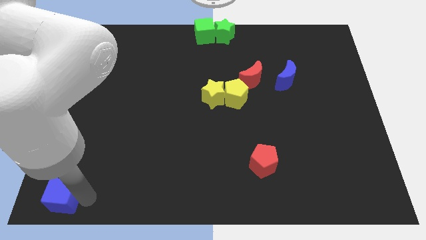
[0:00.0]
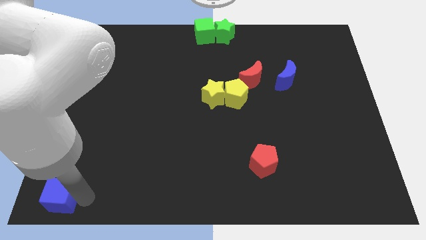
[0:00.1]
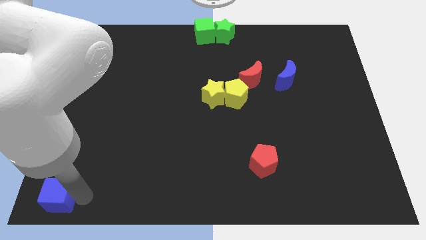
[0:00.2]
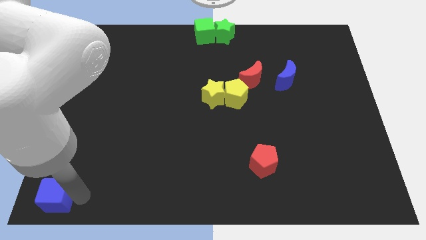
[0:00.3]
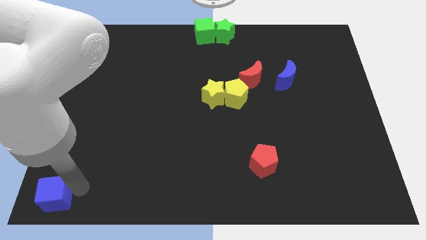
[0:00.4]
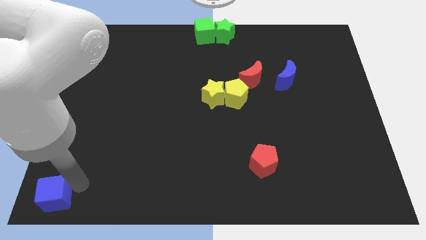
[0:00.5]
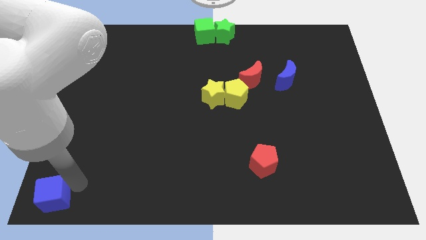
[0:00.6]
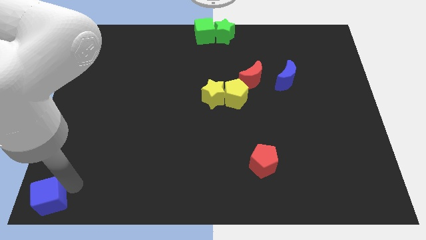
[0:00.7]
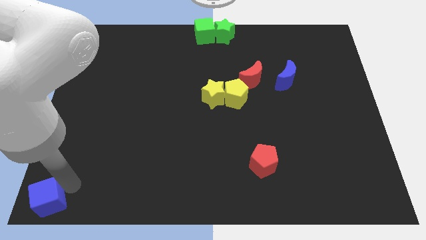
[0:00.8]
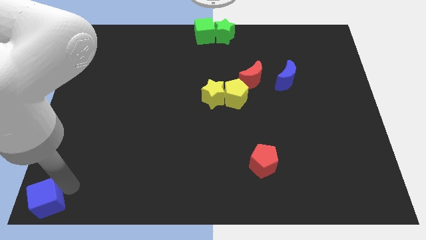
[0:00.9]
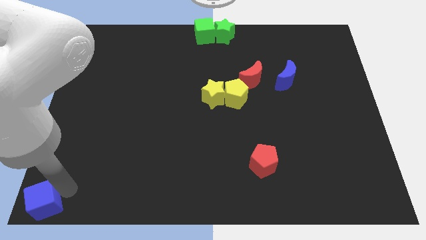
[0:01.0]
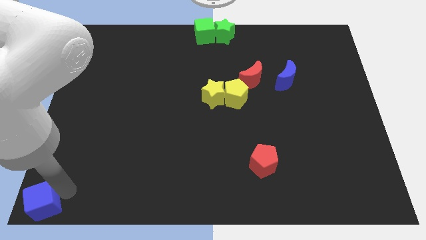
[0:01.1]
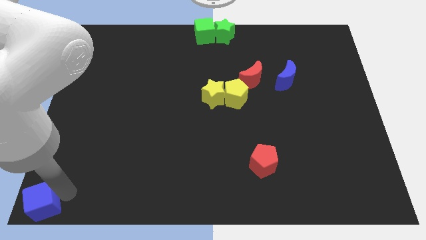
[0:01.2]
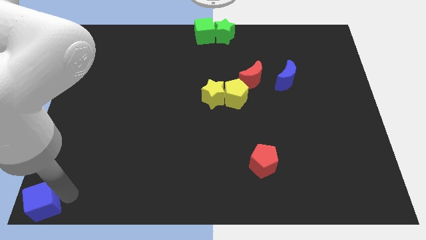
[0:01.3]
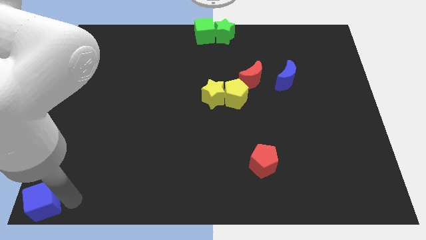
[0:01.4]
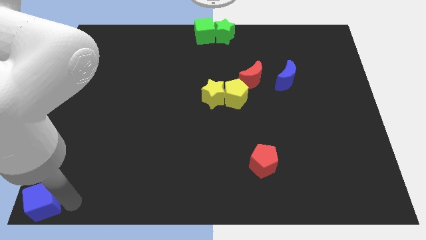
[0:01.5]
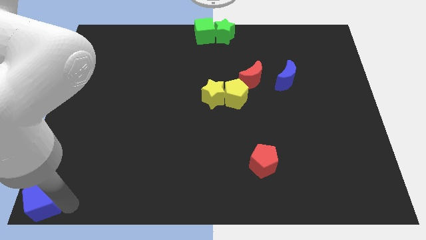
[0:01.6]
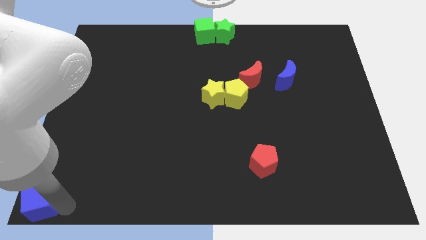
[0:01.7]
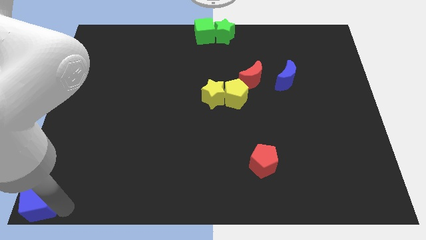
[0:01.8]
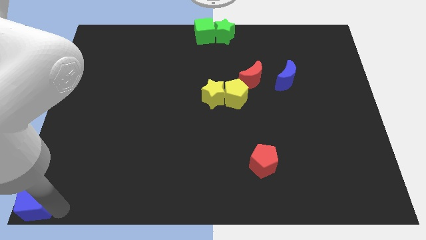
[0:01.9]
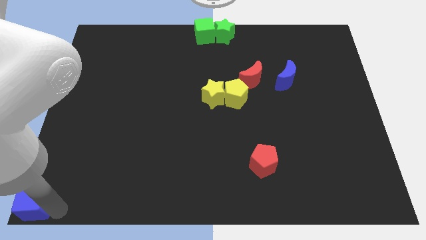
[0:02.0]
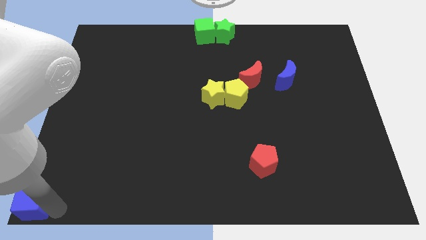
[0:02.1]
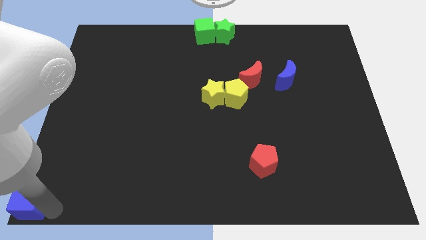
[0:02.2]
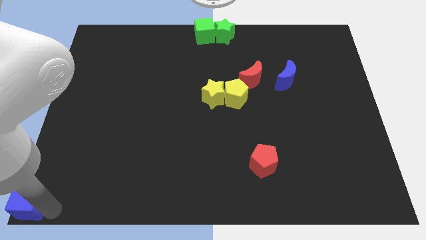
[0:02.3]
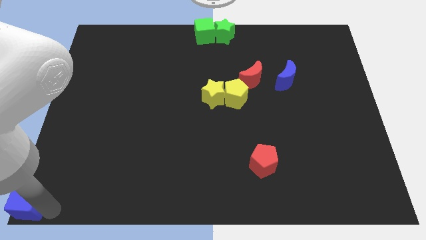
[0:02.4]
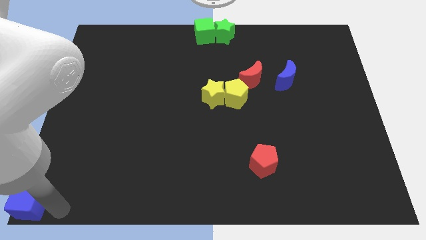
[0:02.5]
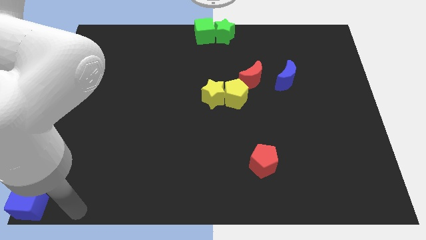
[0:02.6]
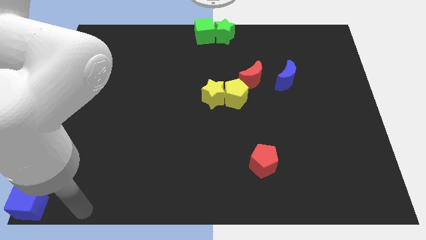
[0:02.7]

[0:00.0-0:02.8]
move blue block to the bottom left of the board

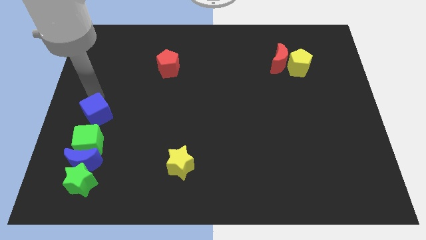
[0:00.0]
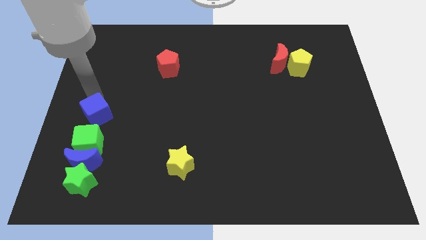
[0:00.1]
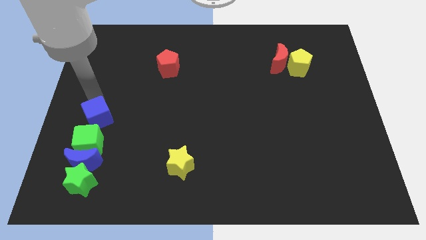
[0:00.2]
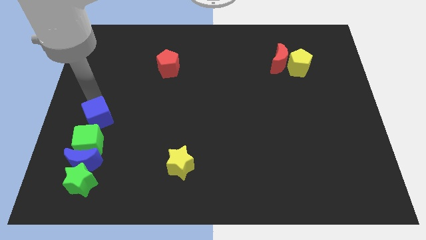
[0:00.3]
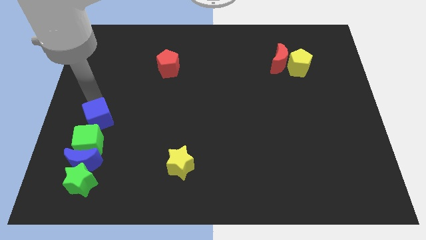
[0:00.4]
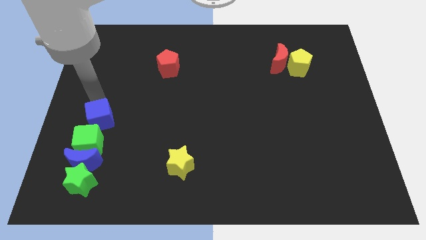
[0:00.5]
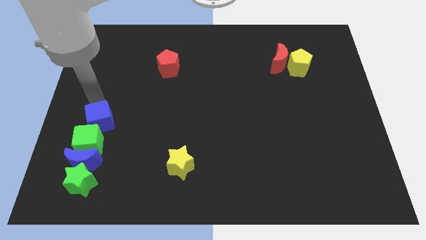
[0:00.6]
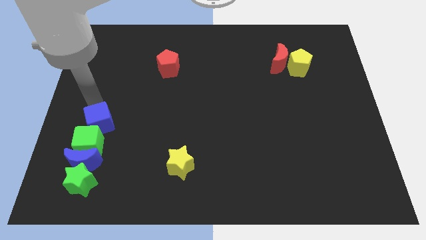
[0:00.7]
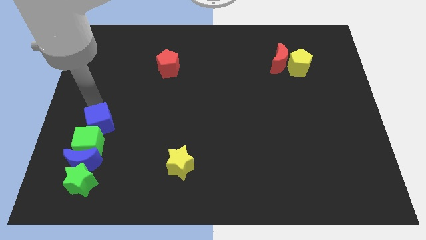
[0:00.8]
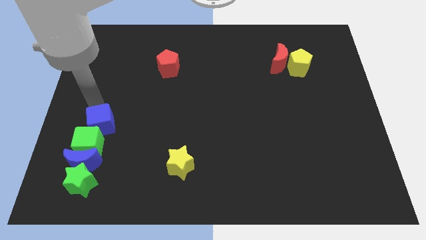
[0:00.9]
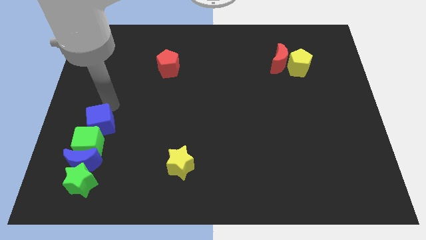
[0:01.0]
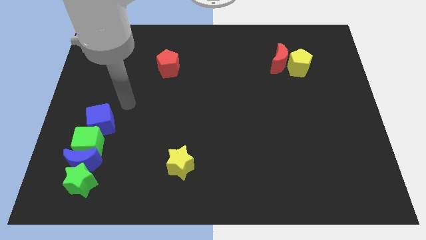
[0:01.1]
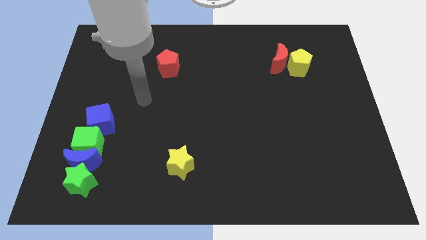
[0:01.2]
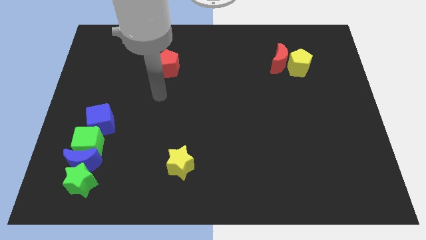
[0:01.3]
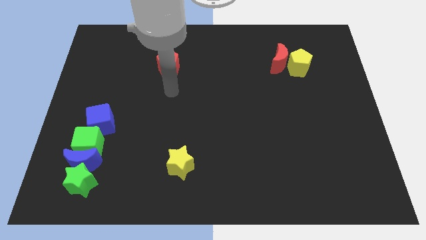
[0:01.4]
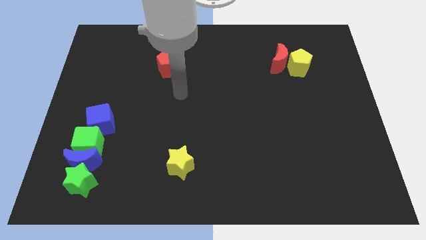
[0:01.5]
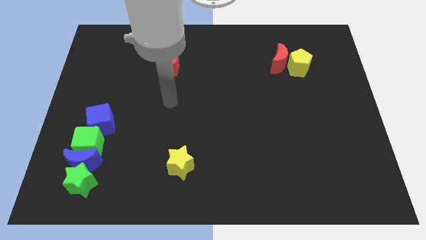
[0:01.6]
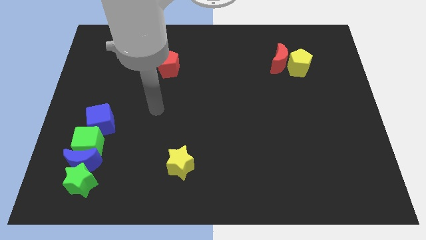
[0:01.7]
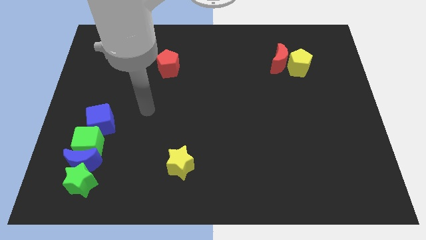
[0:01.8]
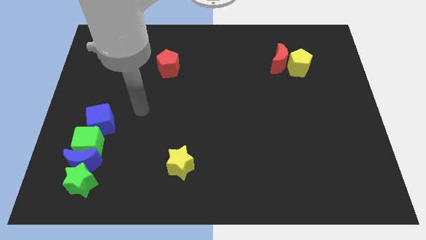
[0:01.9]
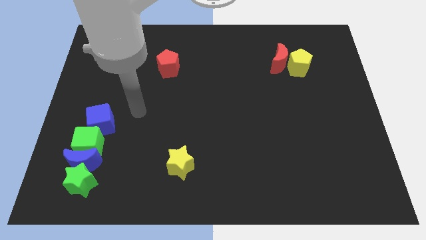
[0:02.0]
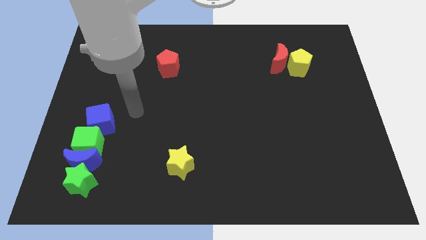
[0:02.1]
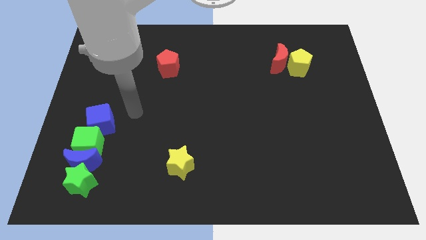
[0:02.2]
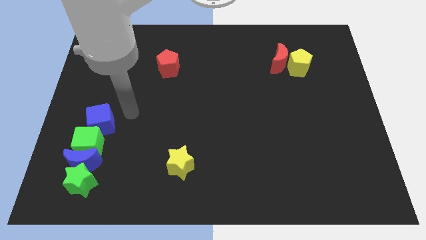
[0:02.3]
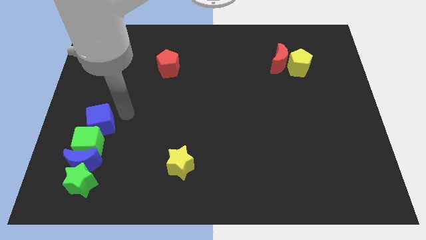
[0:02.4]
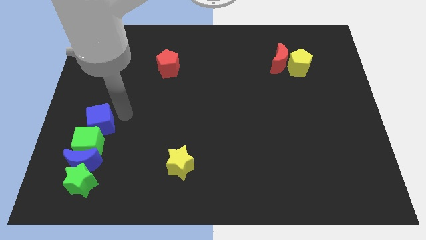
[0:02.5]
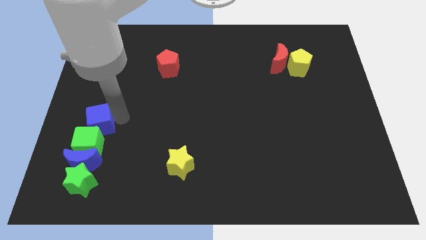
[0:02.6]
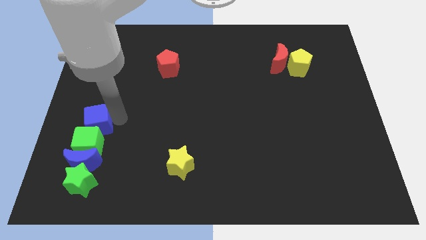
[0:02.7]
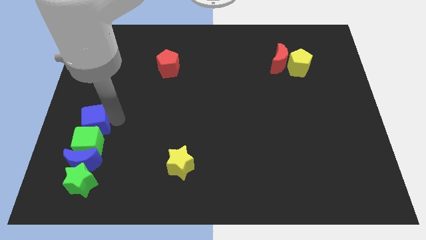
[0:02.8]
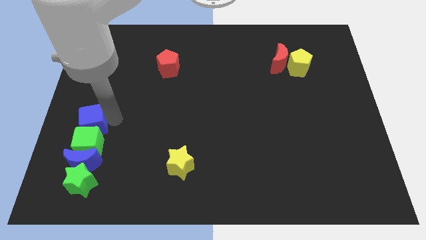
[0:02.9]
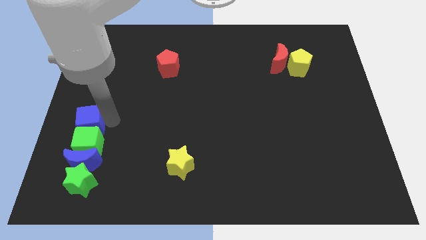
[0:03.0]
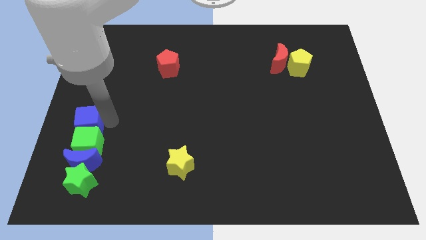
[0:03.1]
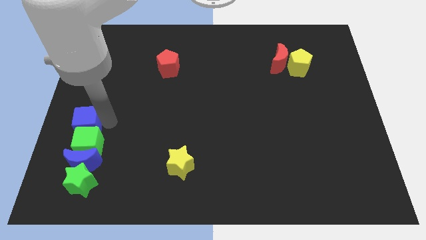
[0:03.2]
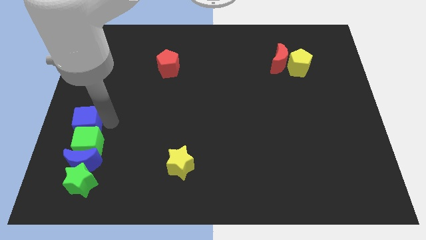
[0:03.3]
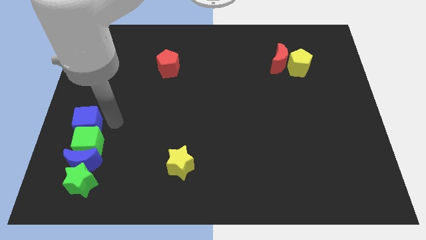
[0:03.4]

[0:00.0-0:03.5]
slightly push the blue cube left to the board

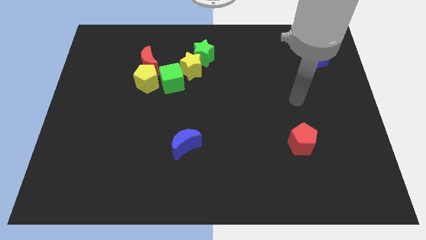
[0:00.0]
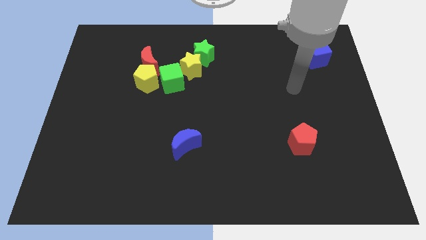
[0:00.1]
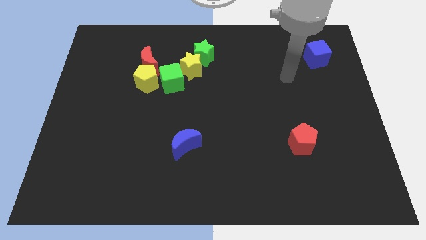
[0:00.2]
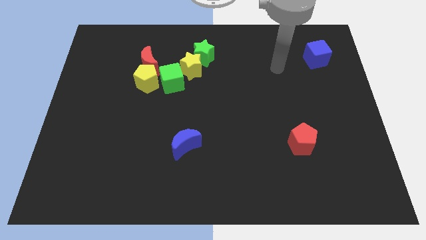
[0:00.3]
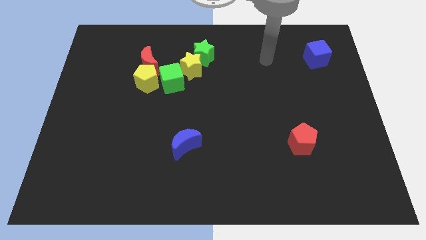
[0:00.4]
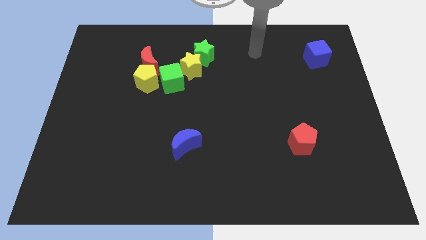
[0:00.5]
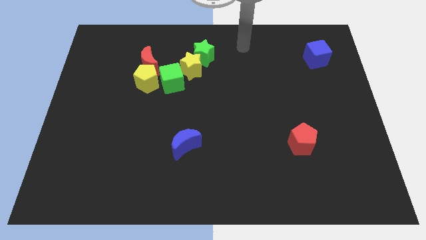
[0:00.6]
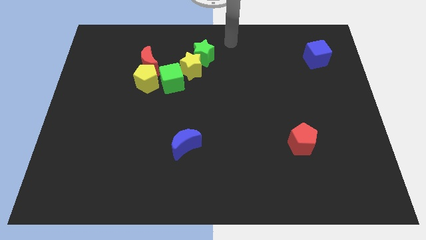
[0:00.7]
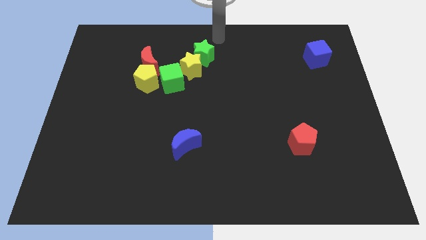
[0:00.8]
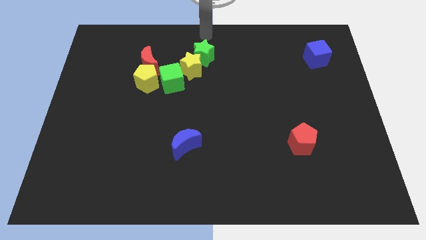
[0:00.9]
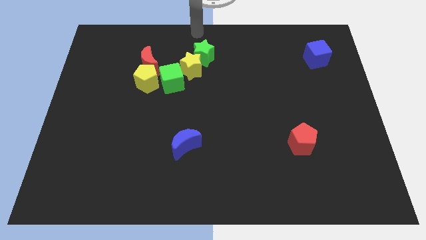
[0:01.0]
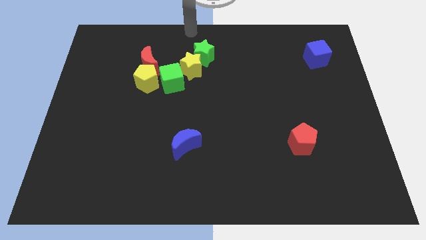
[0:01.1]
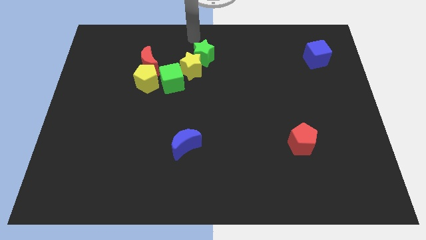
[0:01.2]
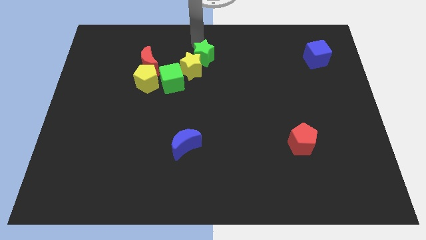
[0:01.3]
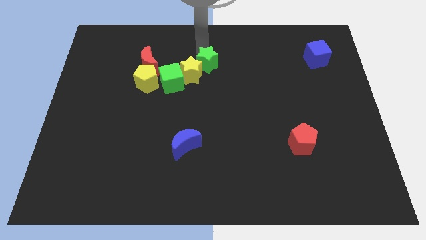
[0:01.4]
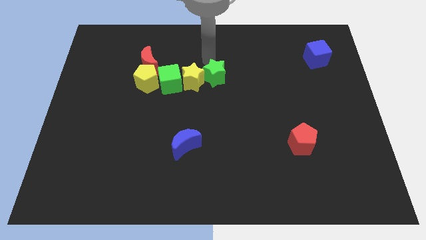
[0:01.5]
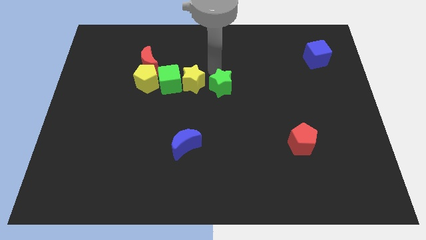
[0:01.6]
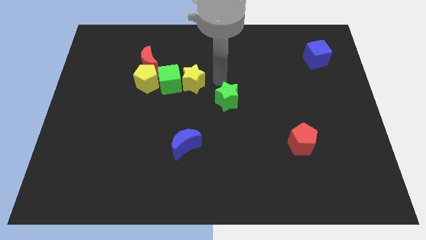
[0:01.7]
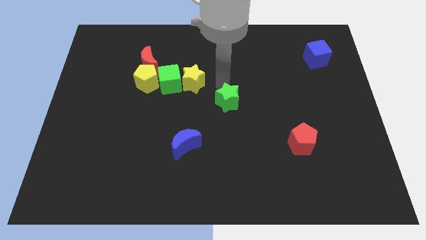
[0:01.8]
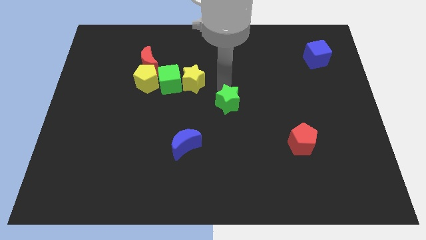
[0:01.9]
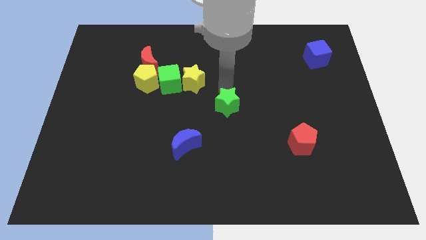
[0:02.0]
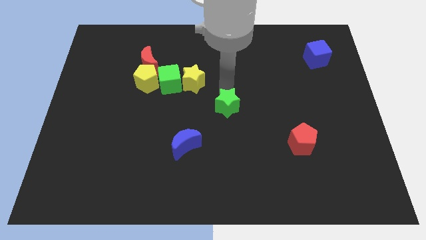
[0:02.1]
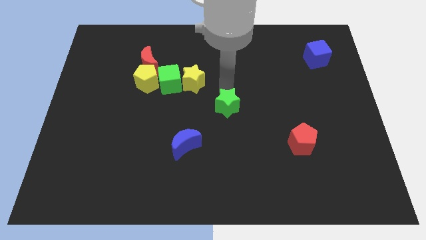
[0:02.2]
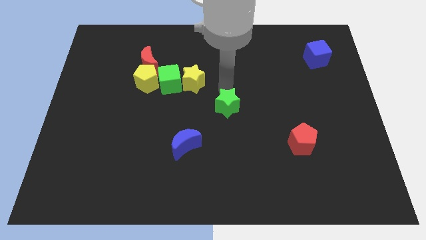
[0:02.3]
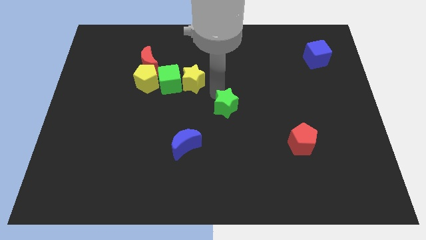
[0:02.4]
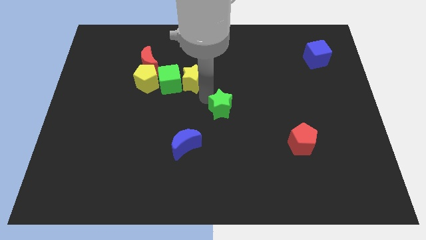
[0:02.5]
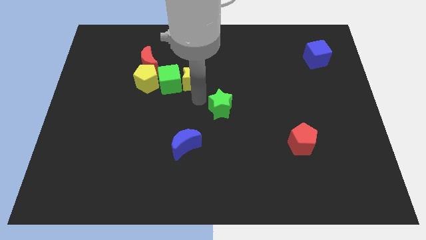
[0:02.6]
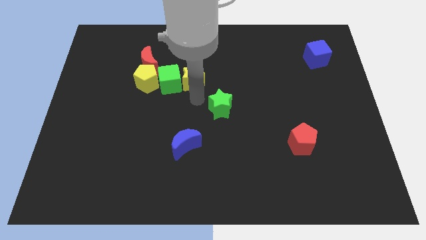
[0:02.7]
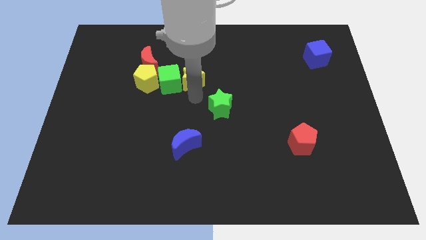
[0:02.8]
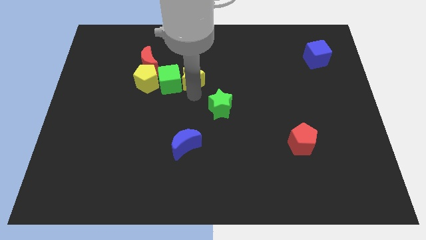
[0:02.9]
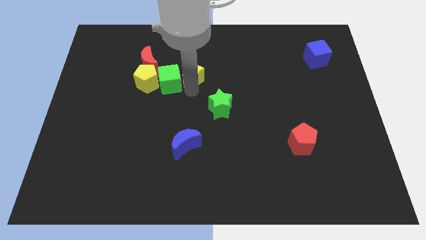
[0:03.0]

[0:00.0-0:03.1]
push the green star to the center of the board
